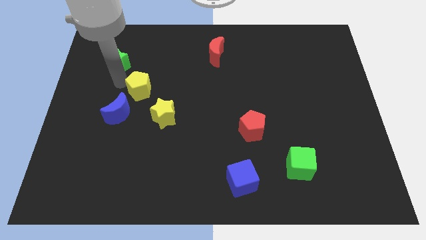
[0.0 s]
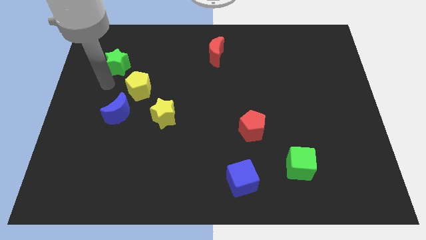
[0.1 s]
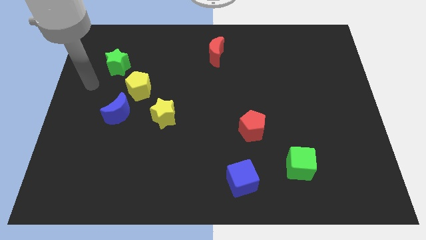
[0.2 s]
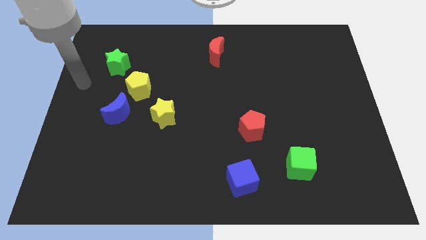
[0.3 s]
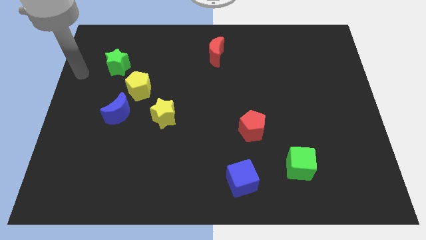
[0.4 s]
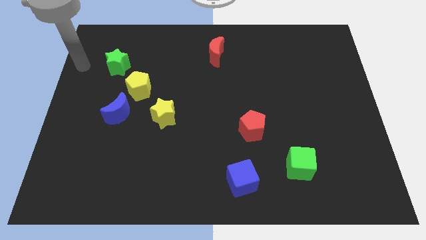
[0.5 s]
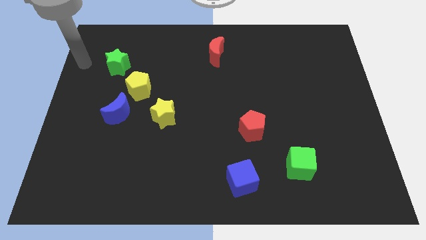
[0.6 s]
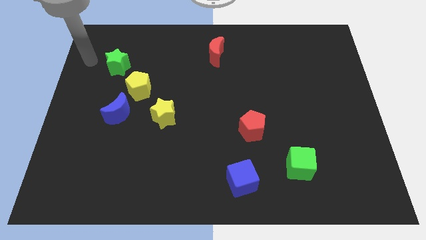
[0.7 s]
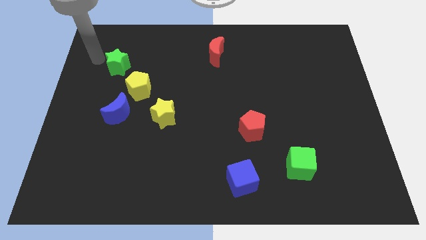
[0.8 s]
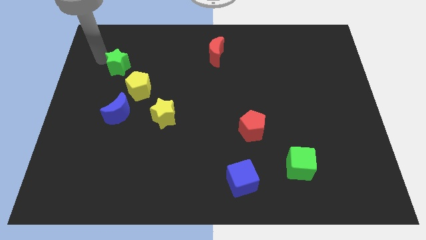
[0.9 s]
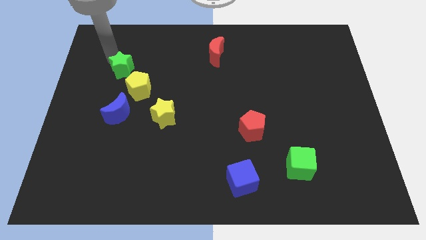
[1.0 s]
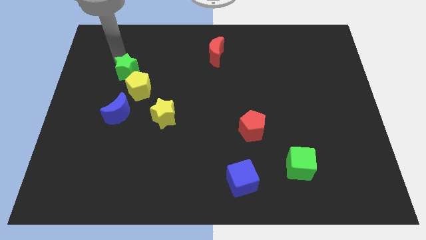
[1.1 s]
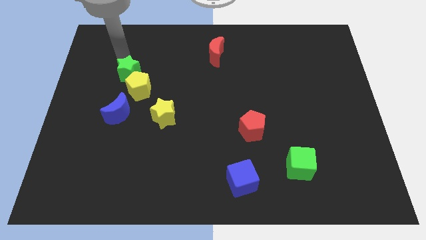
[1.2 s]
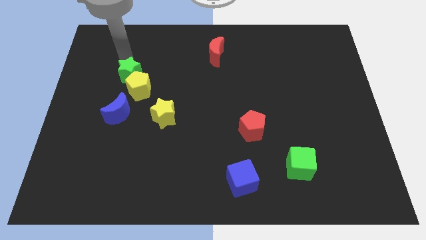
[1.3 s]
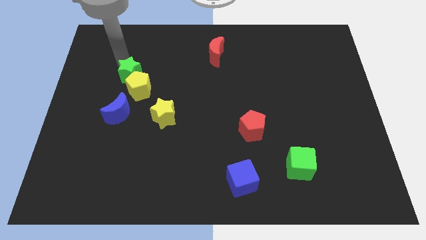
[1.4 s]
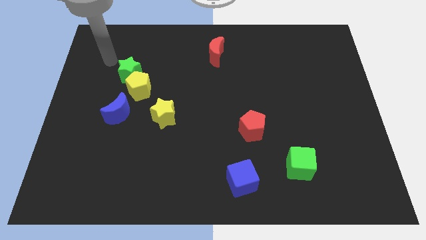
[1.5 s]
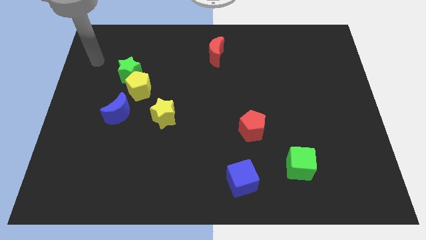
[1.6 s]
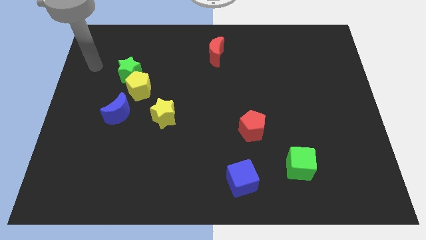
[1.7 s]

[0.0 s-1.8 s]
push the green star into the yellow pentagon

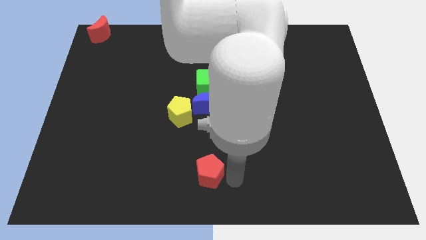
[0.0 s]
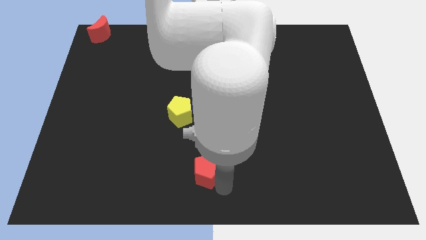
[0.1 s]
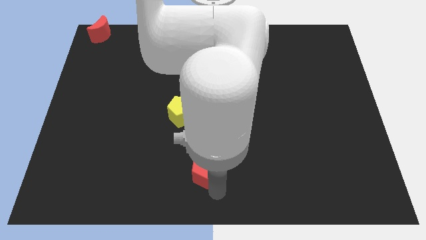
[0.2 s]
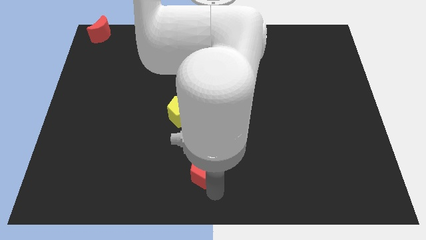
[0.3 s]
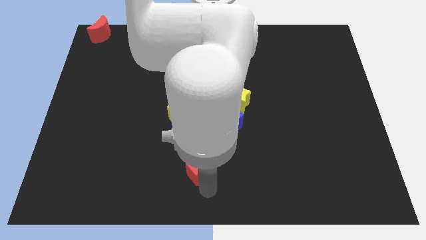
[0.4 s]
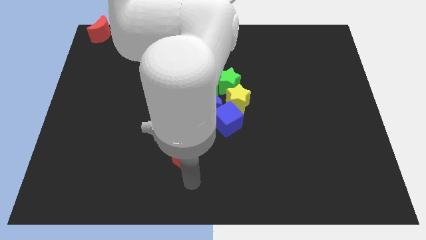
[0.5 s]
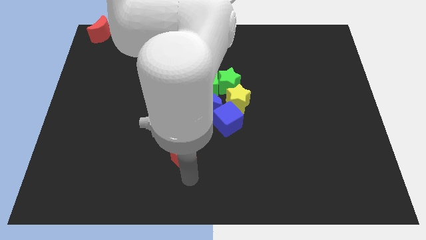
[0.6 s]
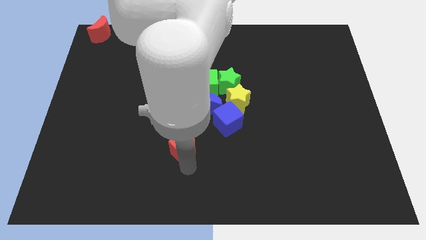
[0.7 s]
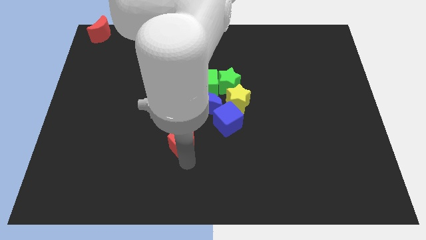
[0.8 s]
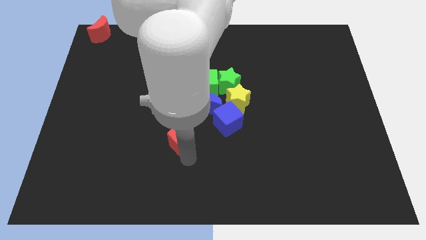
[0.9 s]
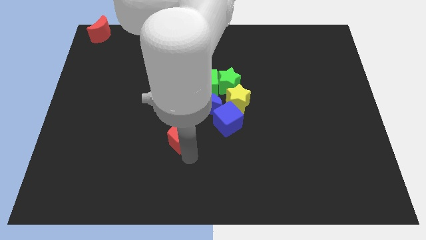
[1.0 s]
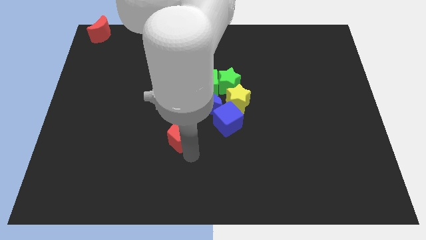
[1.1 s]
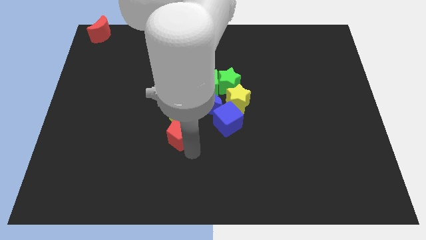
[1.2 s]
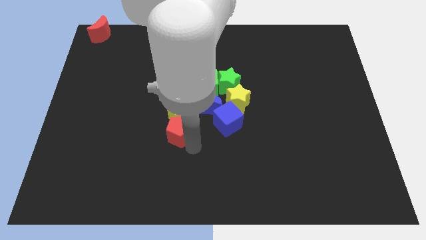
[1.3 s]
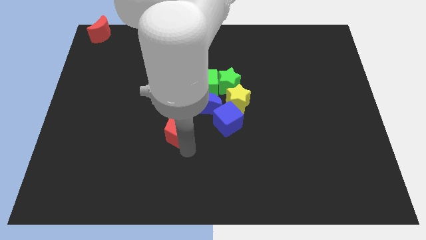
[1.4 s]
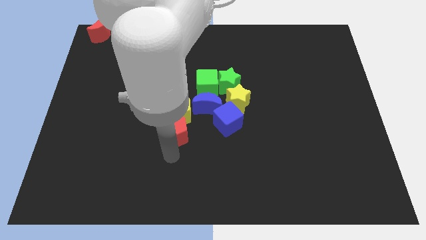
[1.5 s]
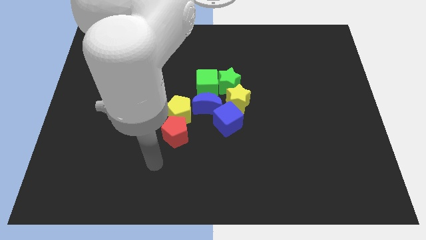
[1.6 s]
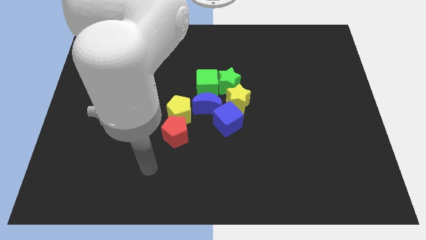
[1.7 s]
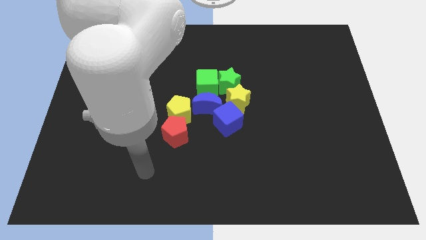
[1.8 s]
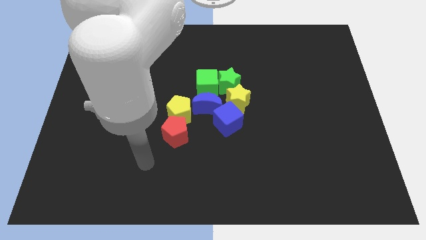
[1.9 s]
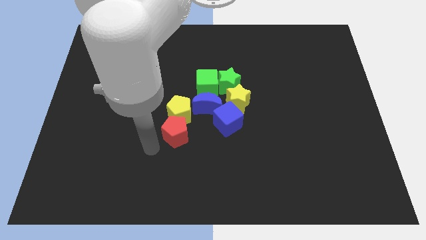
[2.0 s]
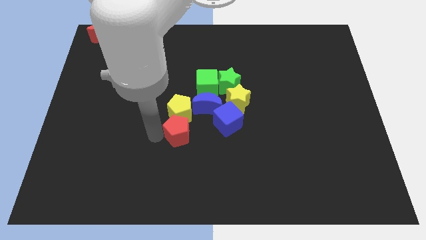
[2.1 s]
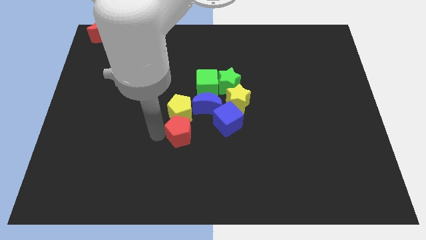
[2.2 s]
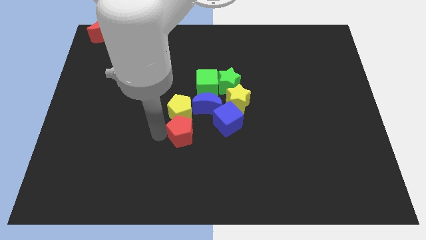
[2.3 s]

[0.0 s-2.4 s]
place the red pentagon below the yellow pentagon

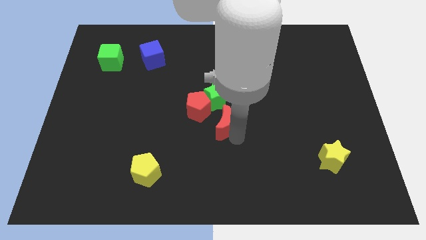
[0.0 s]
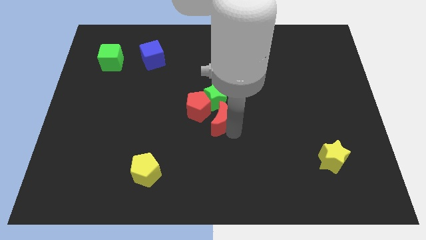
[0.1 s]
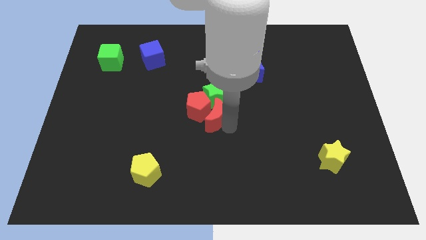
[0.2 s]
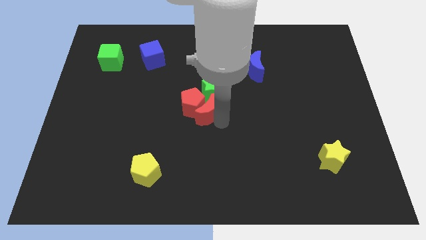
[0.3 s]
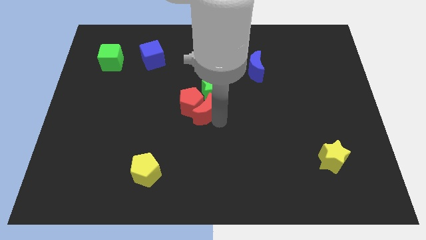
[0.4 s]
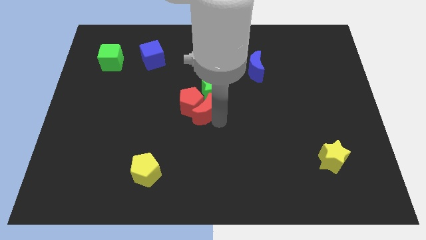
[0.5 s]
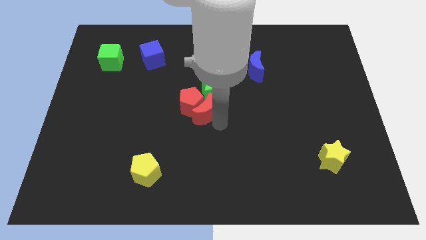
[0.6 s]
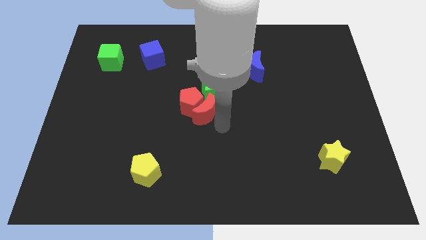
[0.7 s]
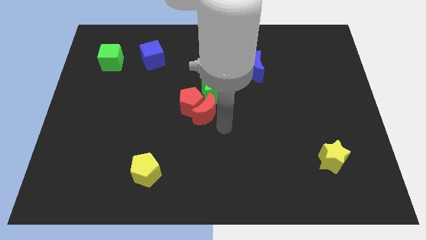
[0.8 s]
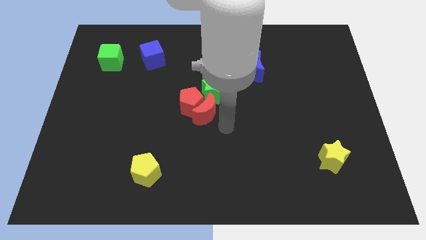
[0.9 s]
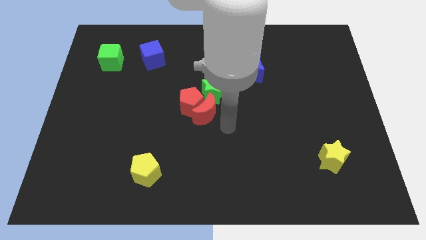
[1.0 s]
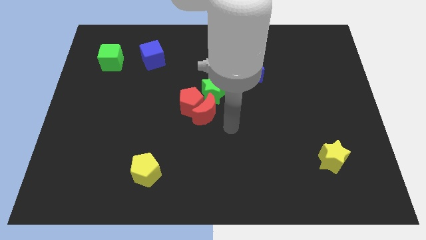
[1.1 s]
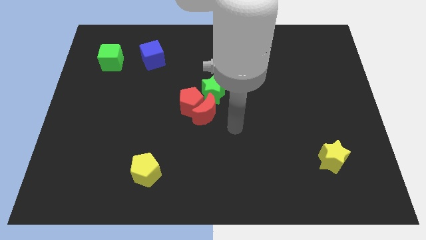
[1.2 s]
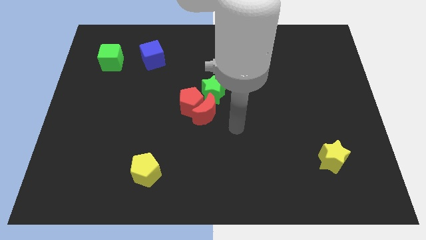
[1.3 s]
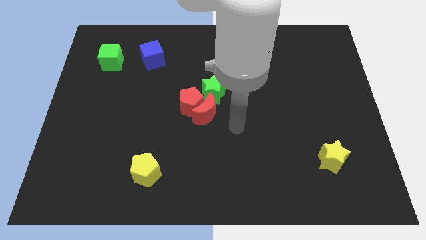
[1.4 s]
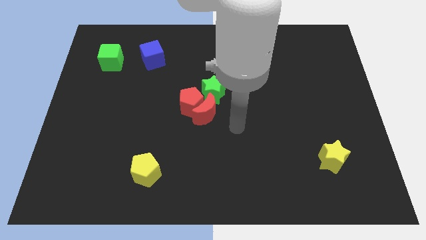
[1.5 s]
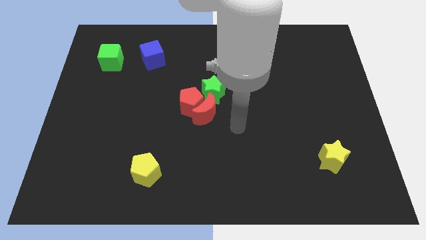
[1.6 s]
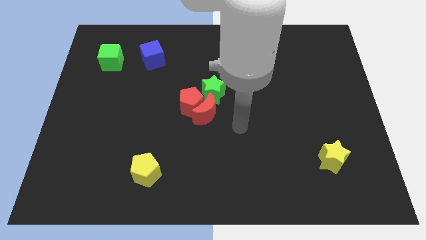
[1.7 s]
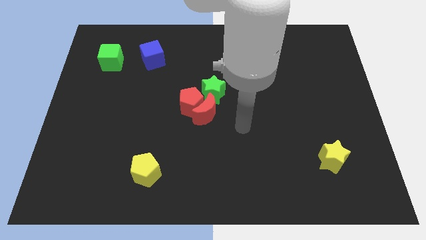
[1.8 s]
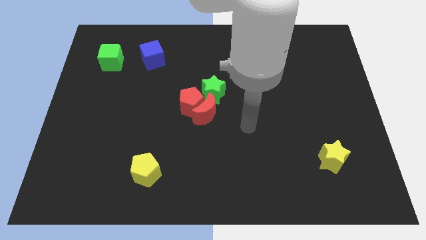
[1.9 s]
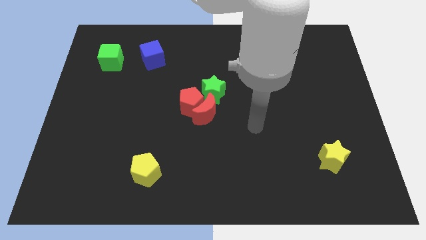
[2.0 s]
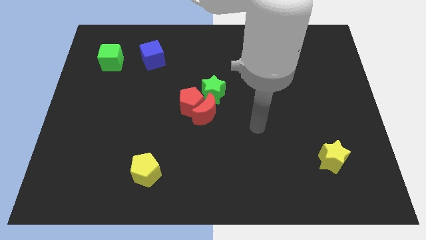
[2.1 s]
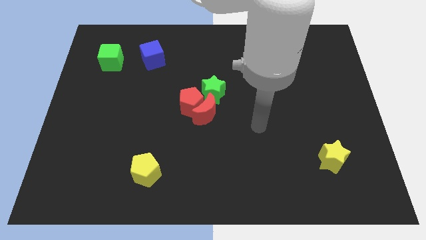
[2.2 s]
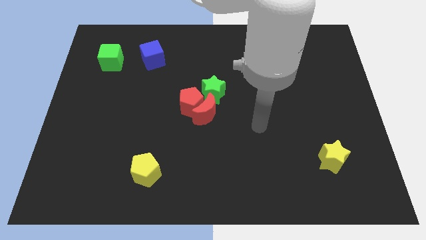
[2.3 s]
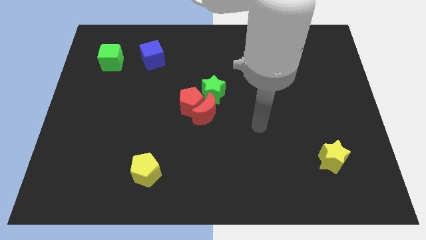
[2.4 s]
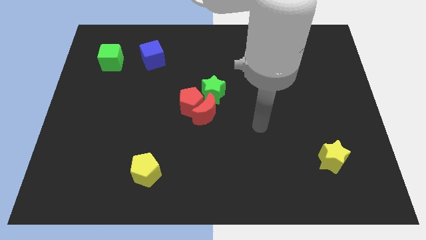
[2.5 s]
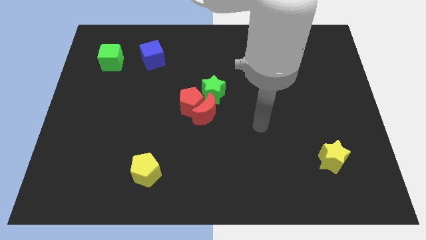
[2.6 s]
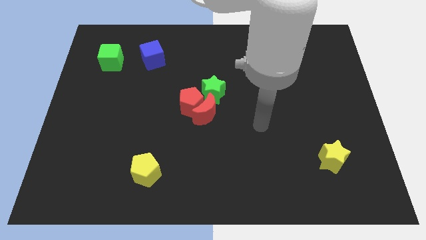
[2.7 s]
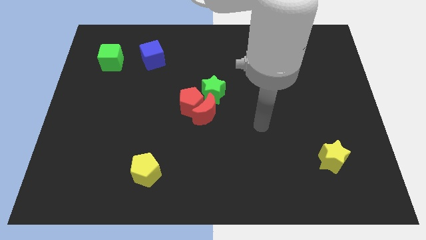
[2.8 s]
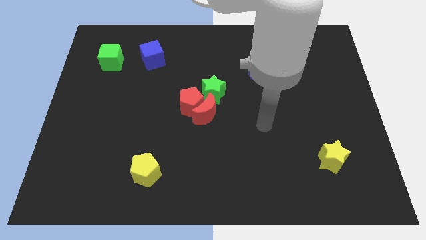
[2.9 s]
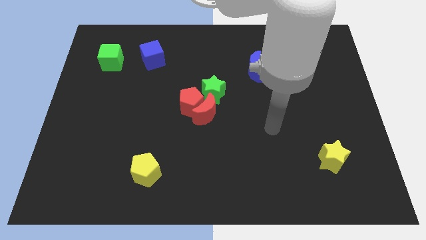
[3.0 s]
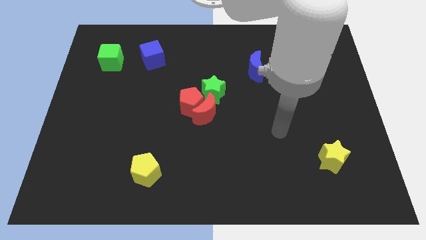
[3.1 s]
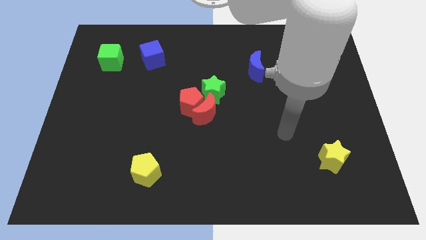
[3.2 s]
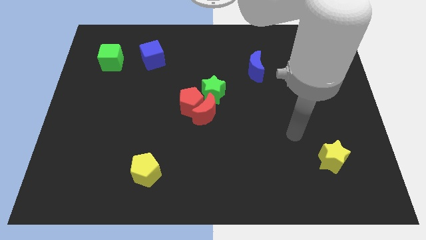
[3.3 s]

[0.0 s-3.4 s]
push the red moon into the red pentagon

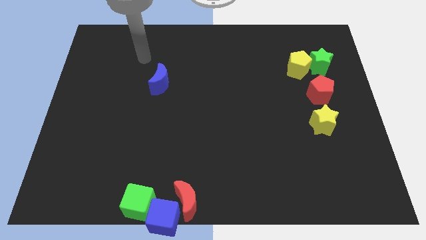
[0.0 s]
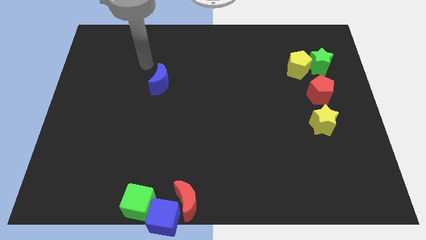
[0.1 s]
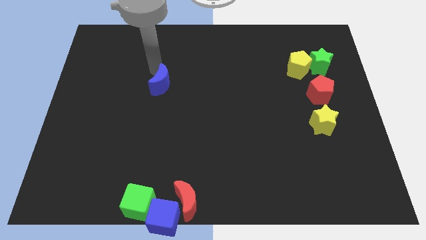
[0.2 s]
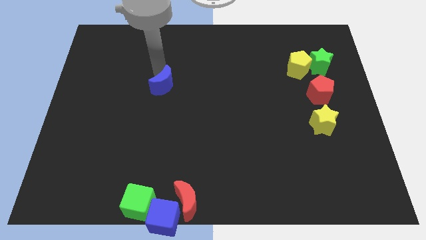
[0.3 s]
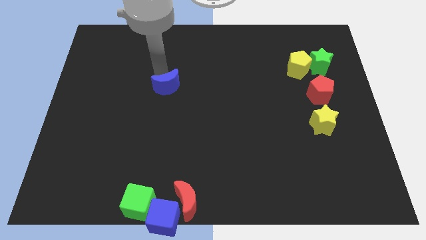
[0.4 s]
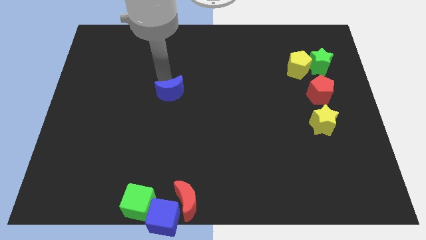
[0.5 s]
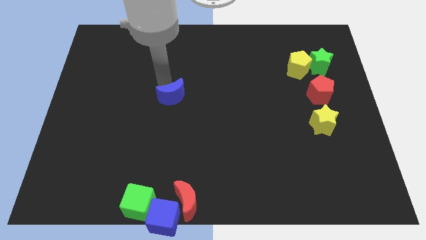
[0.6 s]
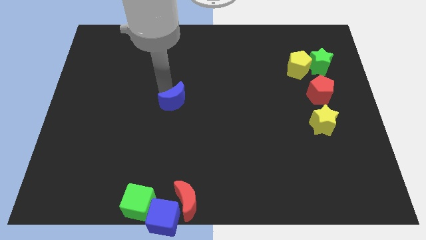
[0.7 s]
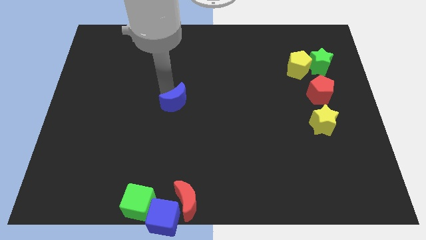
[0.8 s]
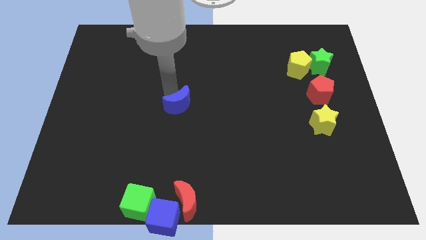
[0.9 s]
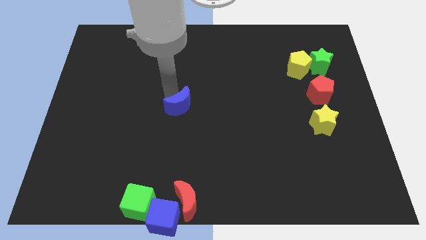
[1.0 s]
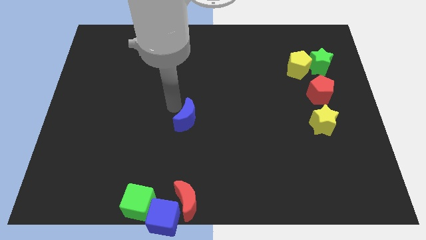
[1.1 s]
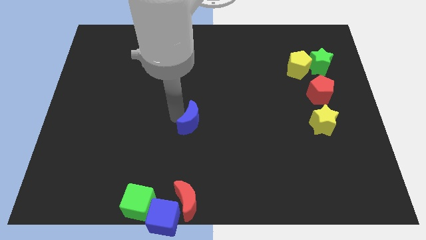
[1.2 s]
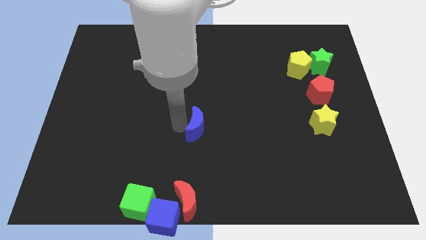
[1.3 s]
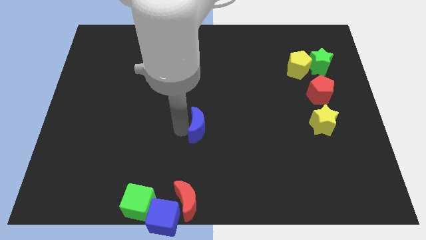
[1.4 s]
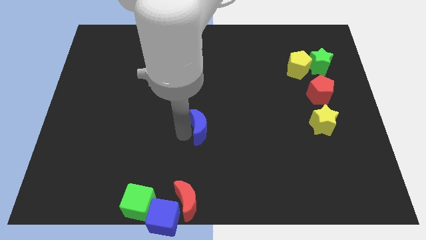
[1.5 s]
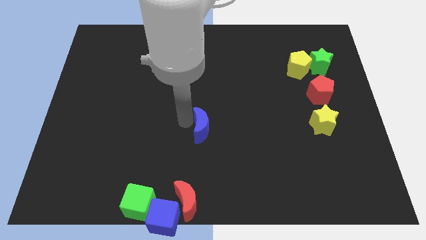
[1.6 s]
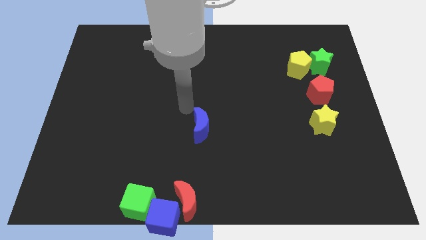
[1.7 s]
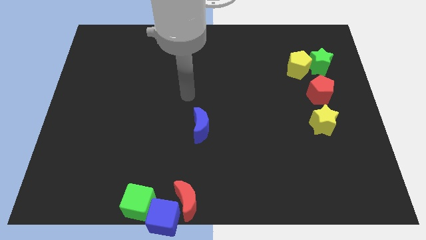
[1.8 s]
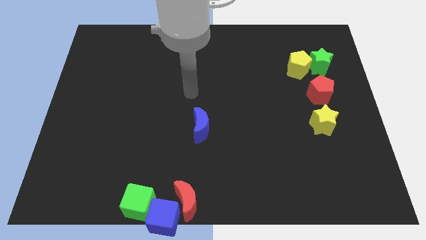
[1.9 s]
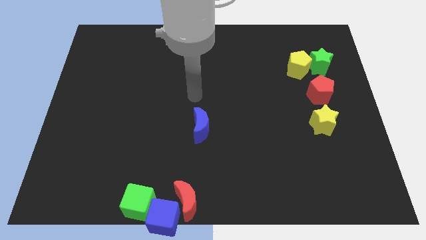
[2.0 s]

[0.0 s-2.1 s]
place the blue crescent to the left of the yellow star
